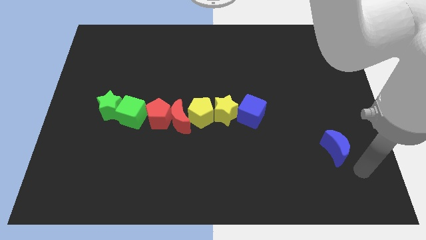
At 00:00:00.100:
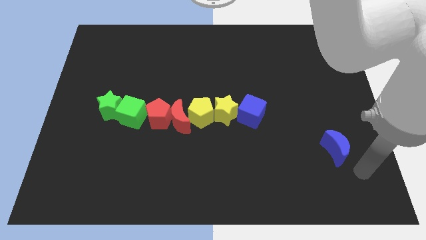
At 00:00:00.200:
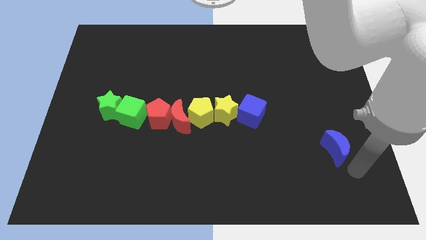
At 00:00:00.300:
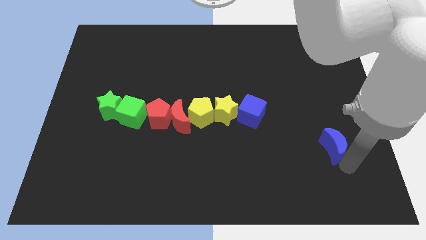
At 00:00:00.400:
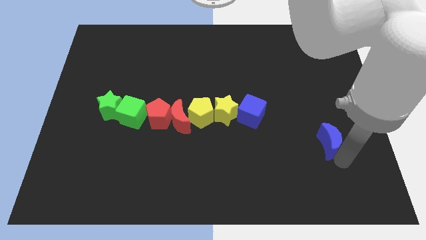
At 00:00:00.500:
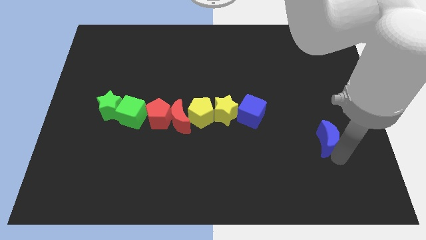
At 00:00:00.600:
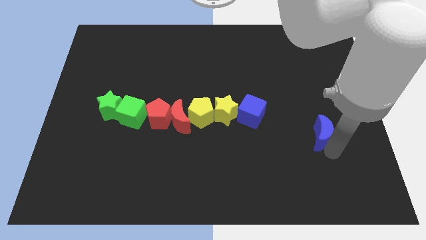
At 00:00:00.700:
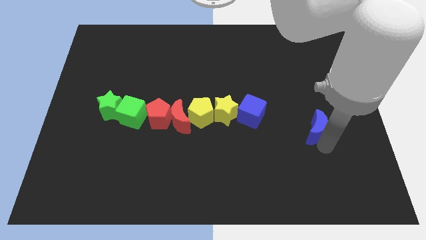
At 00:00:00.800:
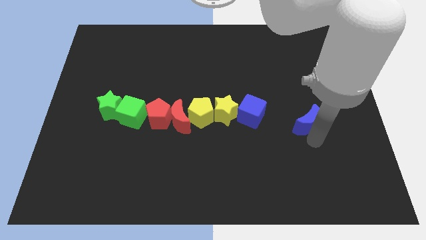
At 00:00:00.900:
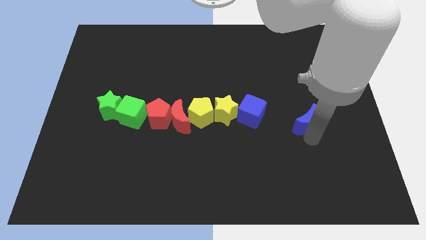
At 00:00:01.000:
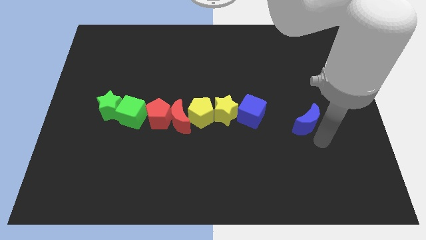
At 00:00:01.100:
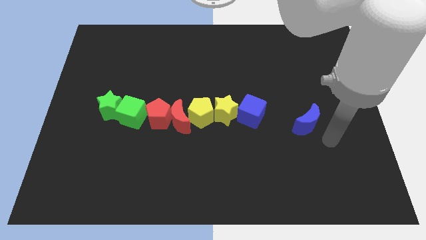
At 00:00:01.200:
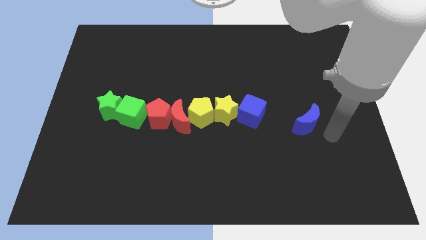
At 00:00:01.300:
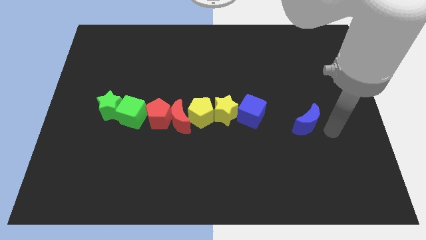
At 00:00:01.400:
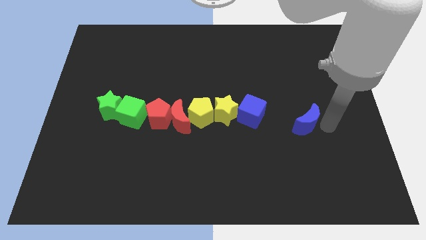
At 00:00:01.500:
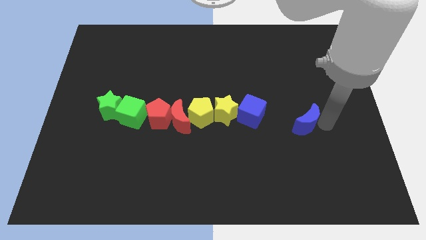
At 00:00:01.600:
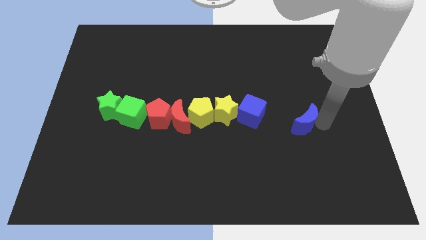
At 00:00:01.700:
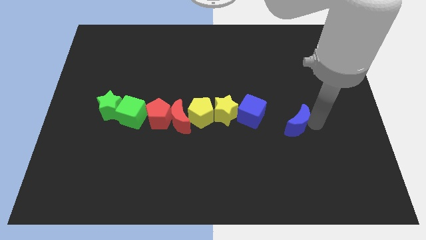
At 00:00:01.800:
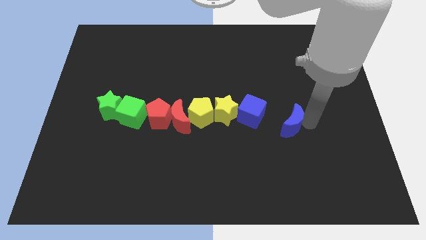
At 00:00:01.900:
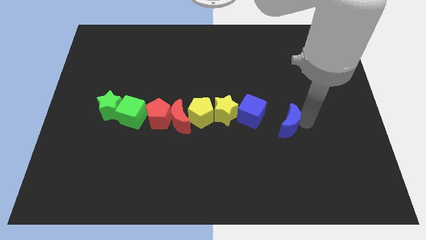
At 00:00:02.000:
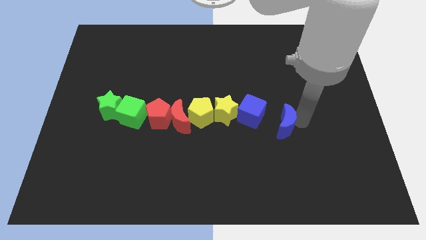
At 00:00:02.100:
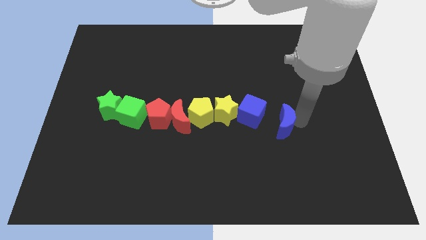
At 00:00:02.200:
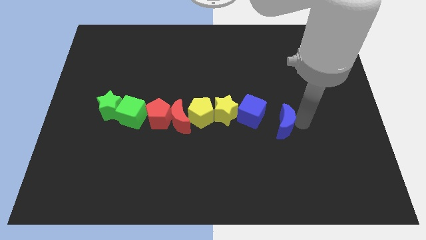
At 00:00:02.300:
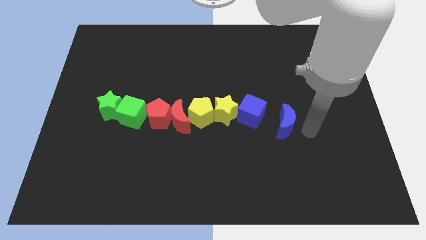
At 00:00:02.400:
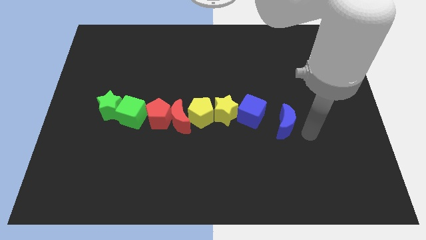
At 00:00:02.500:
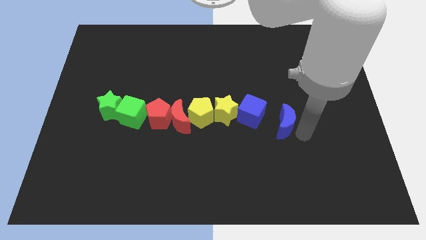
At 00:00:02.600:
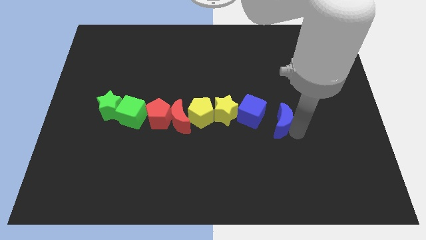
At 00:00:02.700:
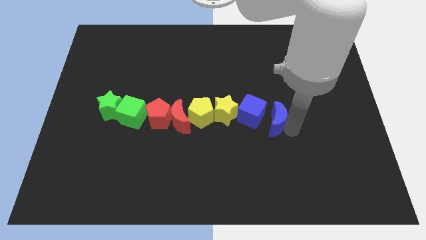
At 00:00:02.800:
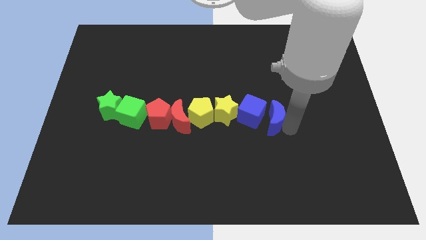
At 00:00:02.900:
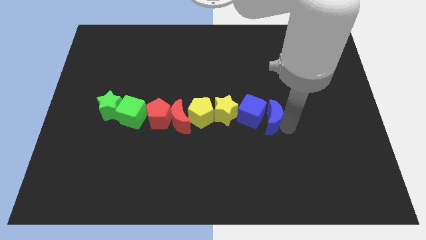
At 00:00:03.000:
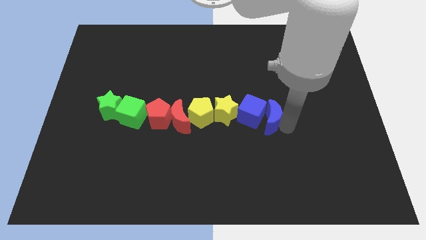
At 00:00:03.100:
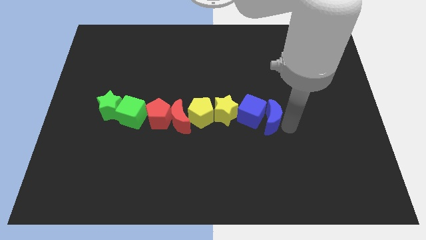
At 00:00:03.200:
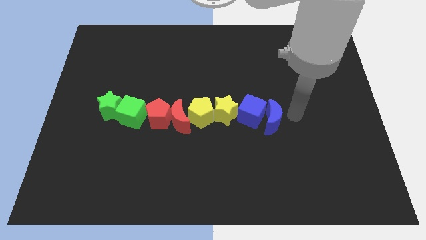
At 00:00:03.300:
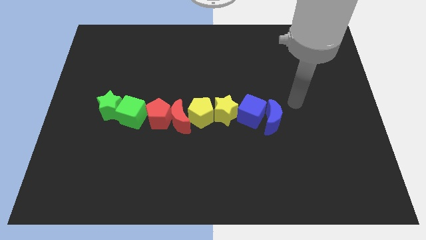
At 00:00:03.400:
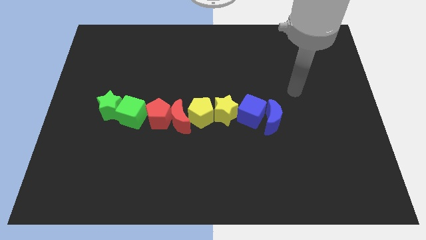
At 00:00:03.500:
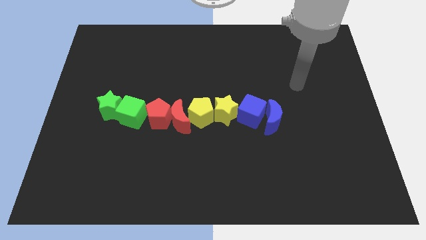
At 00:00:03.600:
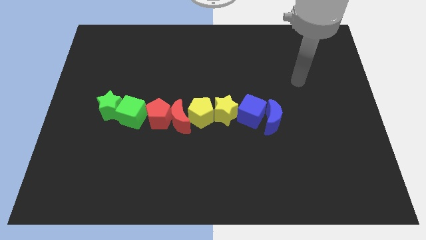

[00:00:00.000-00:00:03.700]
push blue crescent towards blue cube

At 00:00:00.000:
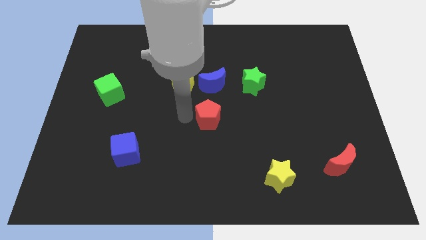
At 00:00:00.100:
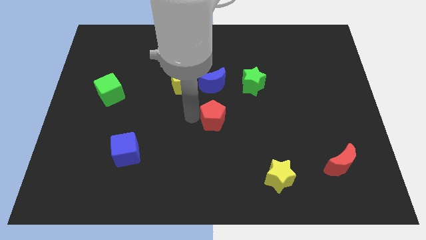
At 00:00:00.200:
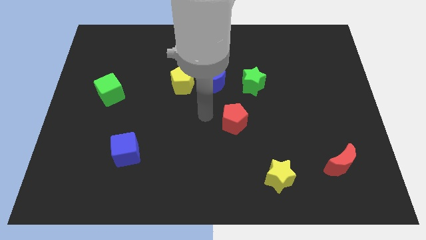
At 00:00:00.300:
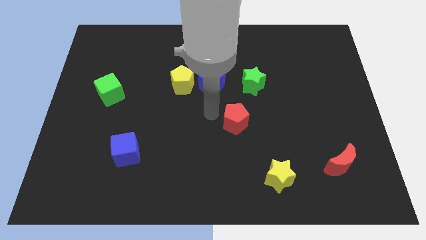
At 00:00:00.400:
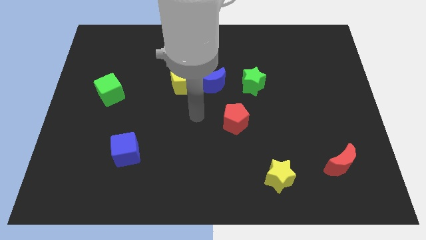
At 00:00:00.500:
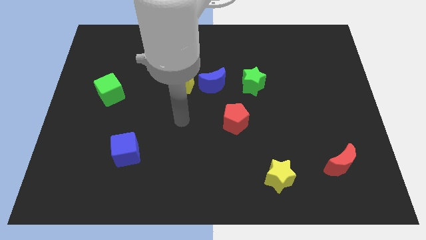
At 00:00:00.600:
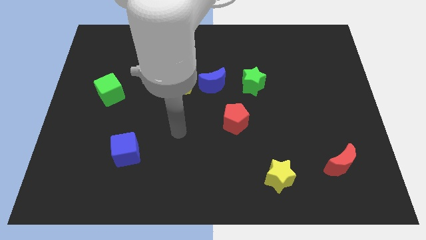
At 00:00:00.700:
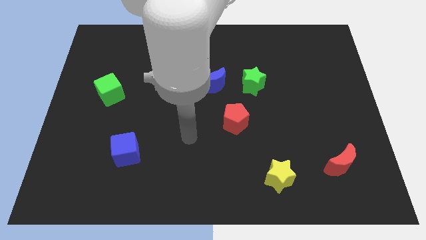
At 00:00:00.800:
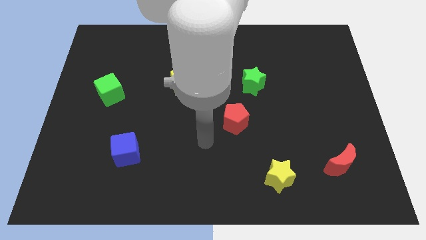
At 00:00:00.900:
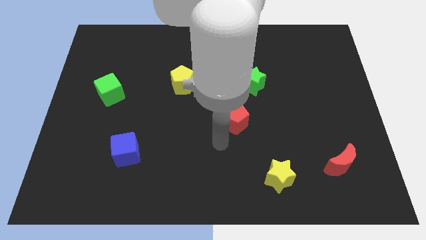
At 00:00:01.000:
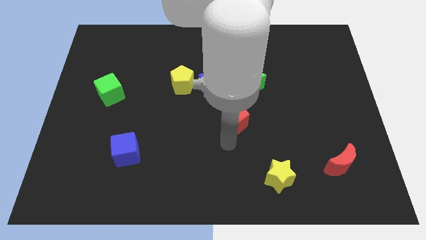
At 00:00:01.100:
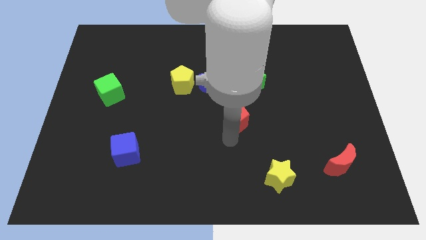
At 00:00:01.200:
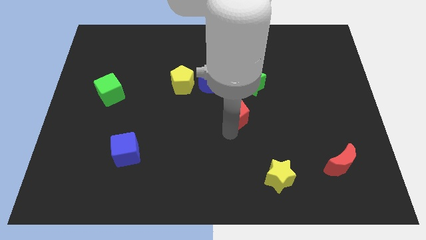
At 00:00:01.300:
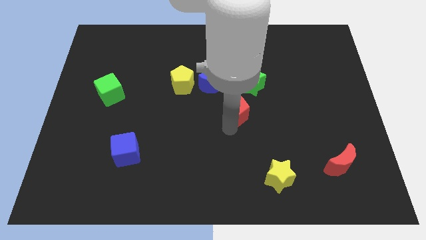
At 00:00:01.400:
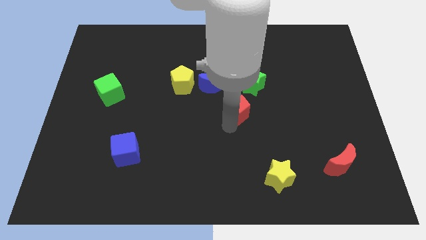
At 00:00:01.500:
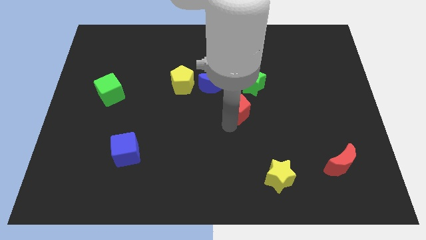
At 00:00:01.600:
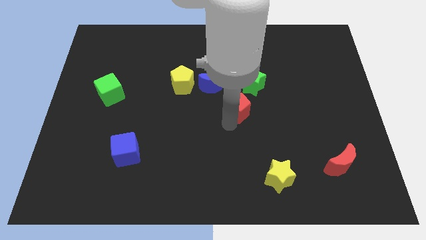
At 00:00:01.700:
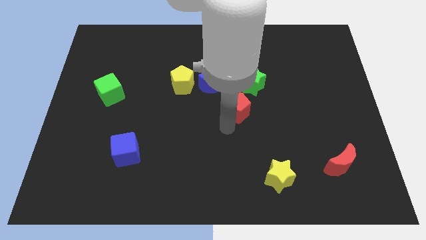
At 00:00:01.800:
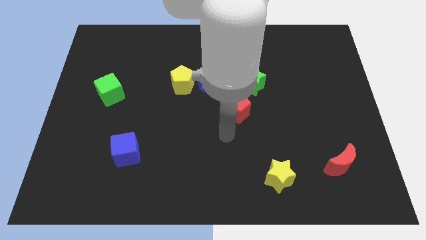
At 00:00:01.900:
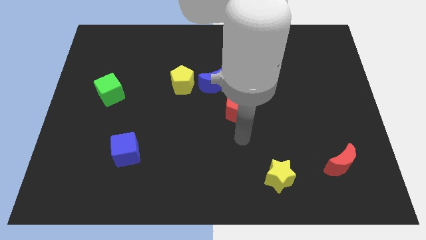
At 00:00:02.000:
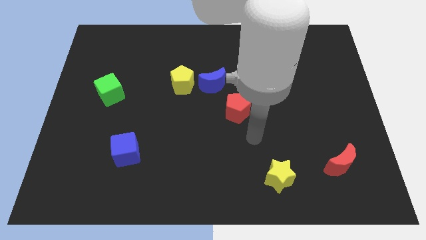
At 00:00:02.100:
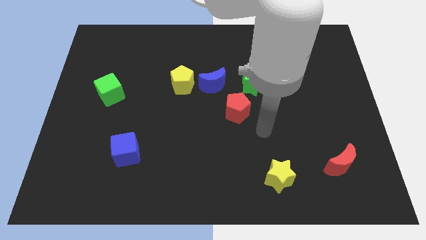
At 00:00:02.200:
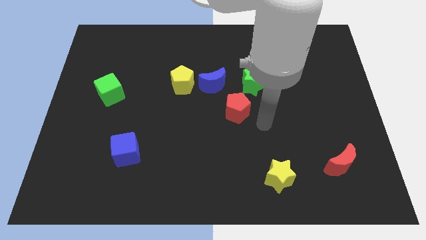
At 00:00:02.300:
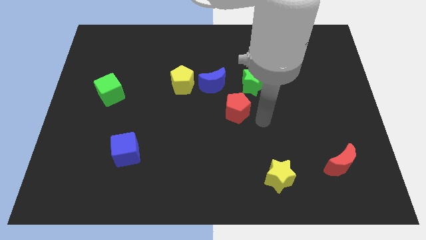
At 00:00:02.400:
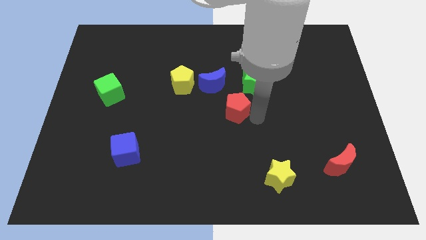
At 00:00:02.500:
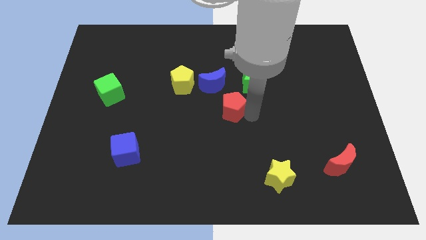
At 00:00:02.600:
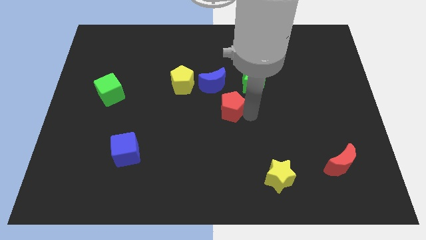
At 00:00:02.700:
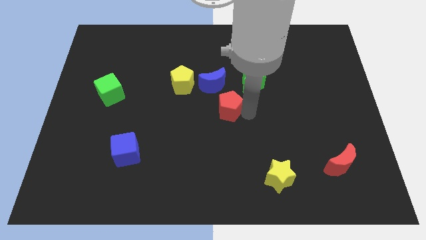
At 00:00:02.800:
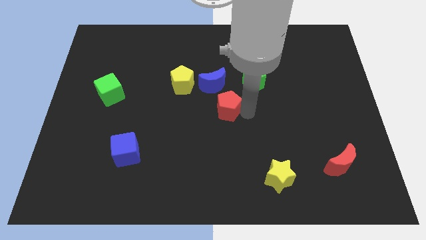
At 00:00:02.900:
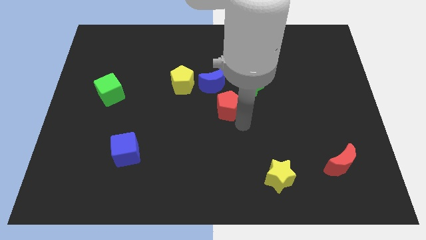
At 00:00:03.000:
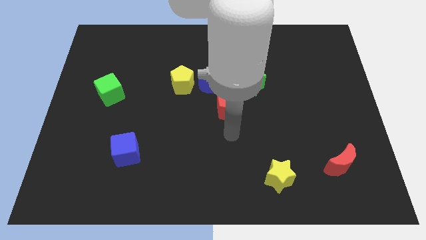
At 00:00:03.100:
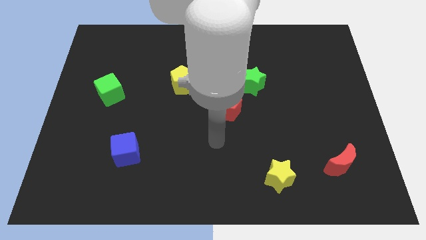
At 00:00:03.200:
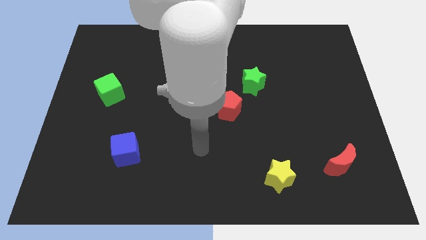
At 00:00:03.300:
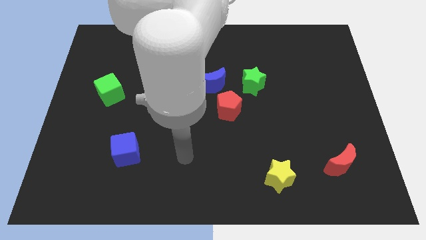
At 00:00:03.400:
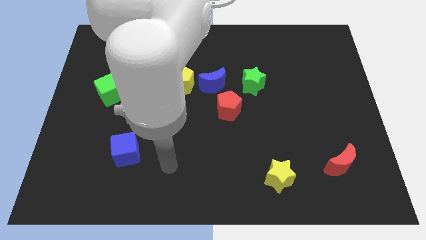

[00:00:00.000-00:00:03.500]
make a triangle with the red pentagon green star and blue moon

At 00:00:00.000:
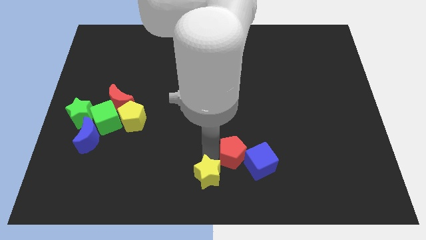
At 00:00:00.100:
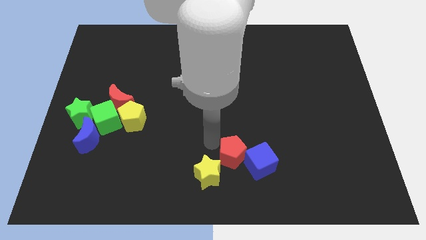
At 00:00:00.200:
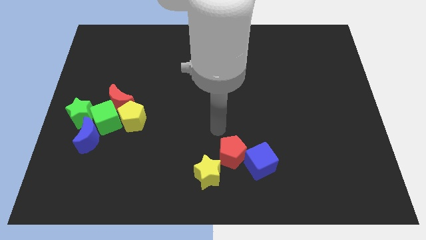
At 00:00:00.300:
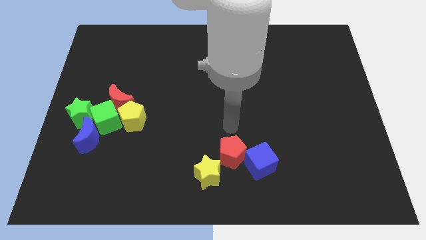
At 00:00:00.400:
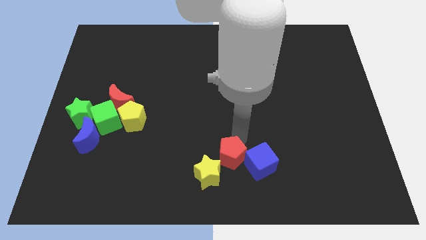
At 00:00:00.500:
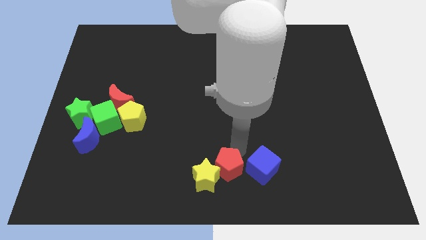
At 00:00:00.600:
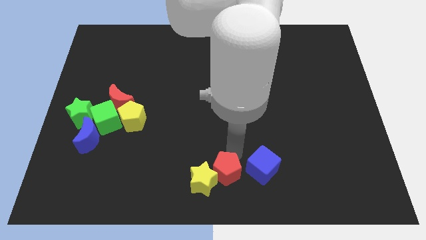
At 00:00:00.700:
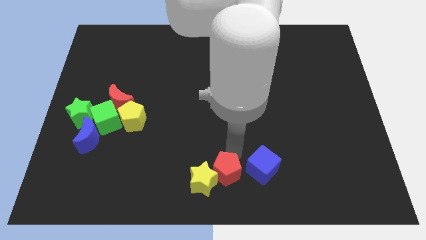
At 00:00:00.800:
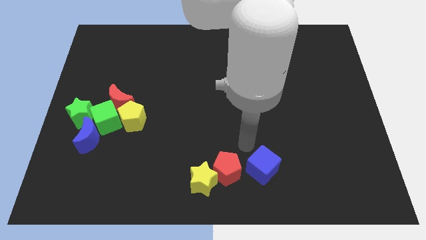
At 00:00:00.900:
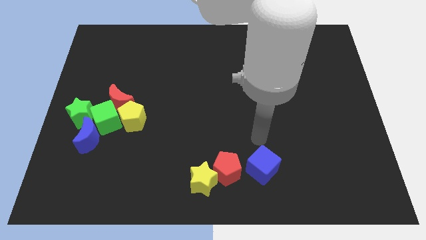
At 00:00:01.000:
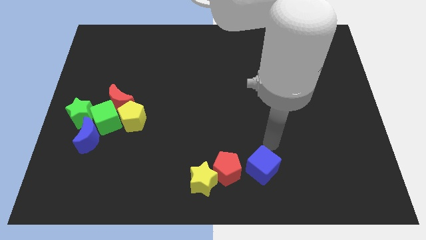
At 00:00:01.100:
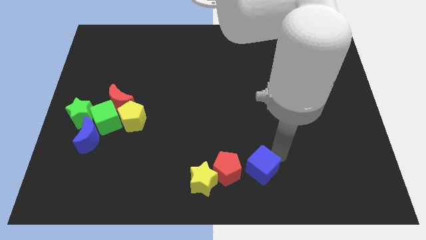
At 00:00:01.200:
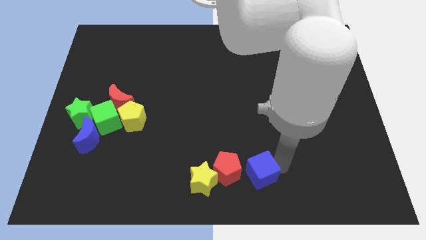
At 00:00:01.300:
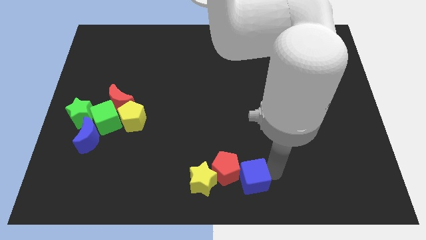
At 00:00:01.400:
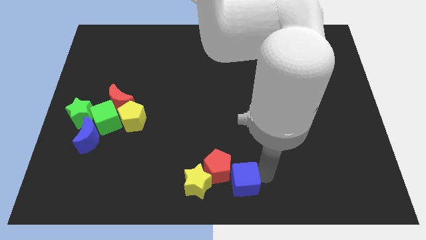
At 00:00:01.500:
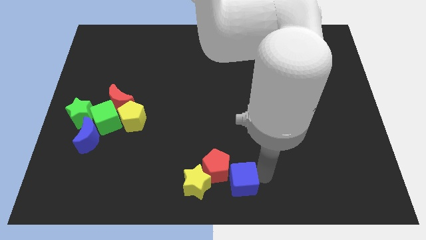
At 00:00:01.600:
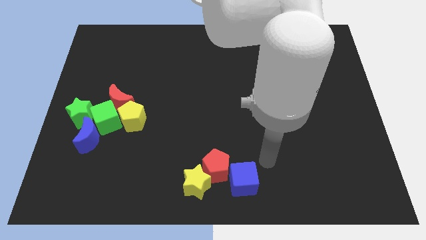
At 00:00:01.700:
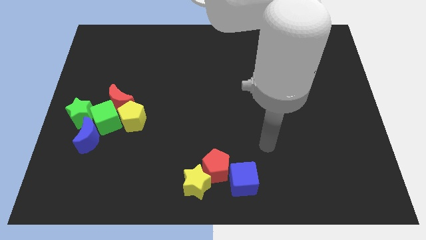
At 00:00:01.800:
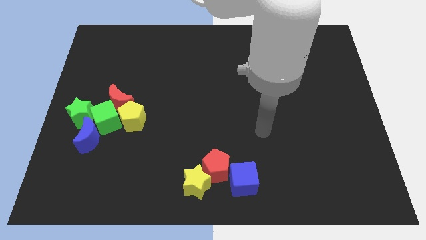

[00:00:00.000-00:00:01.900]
place the red pentagon blue cube and yellow star towards the bottom center of the board
